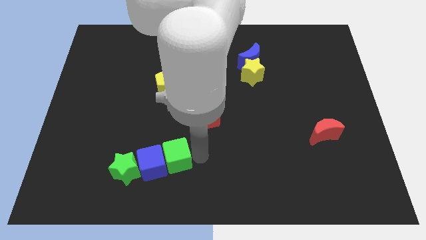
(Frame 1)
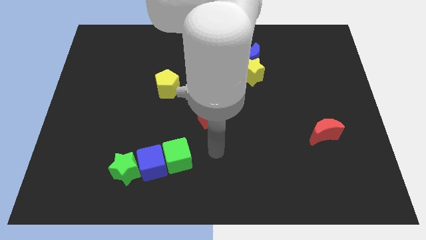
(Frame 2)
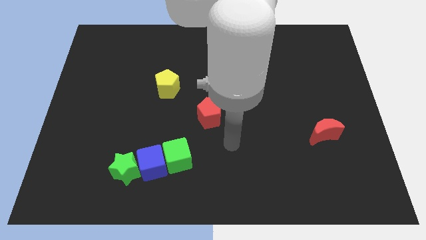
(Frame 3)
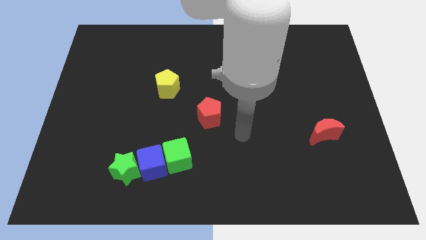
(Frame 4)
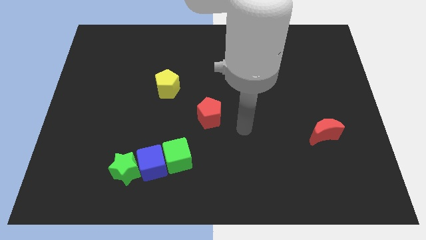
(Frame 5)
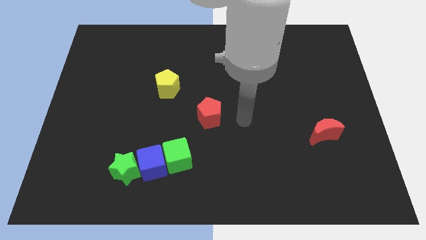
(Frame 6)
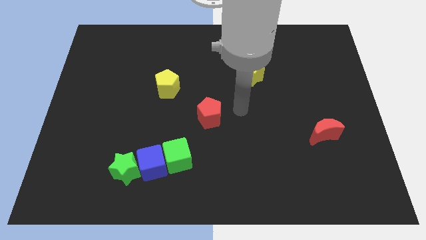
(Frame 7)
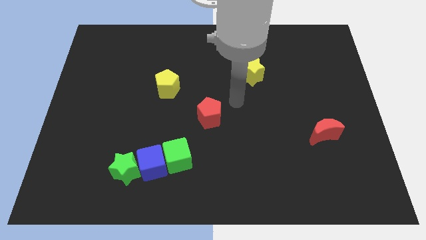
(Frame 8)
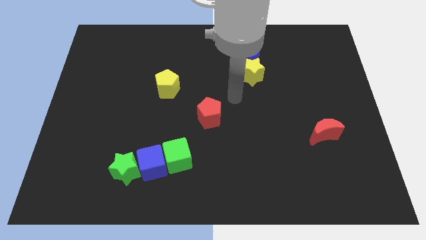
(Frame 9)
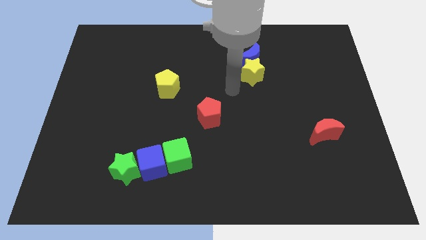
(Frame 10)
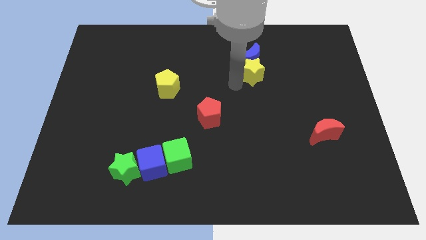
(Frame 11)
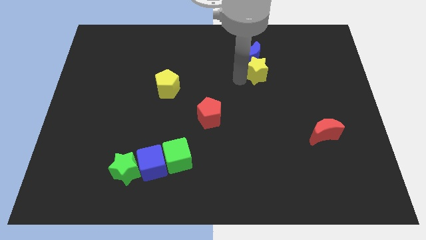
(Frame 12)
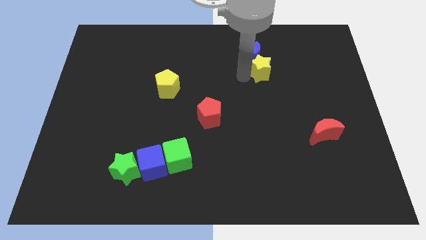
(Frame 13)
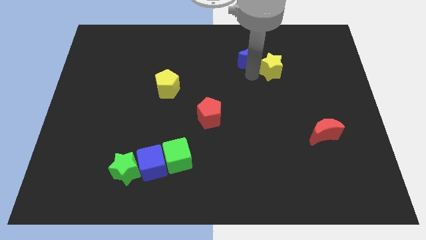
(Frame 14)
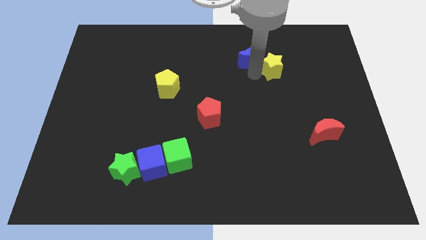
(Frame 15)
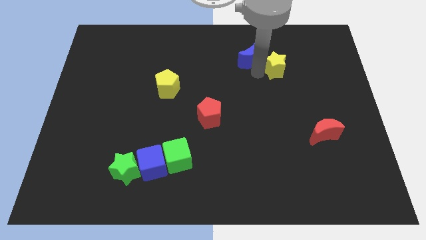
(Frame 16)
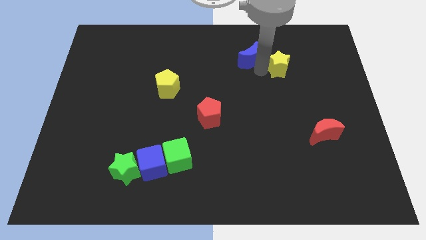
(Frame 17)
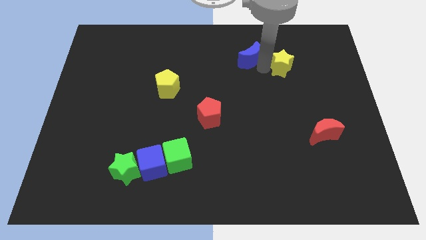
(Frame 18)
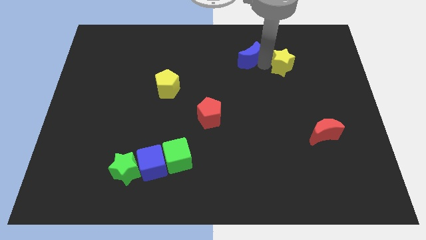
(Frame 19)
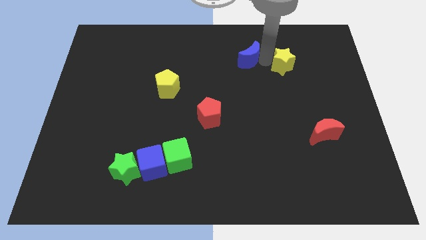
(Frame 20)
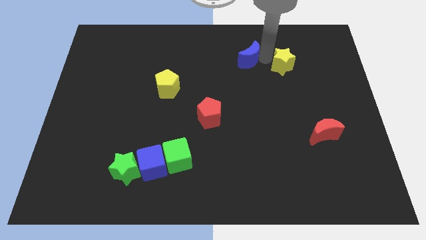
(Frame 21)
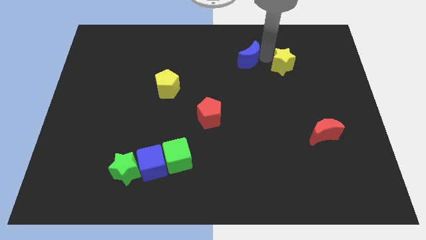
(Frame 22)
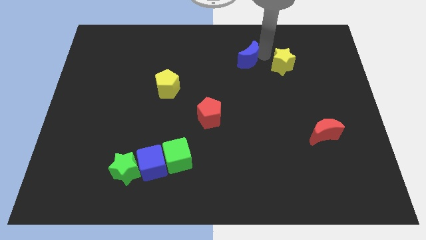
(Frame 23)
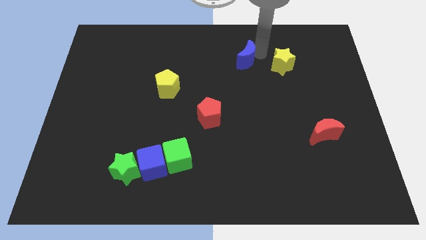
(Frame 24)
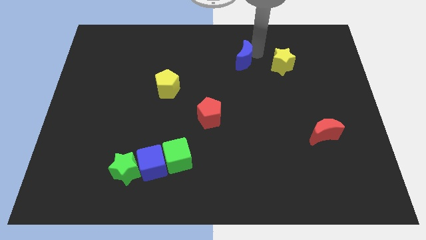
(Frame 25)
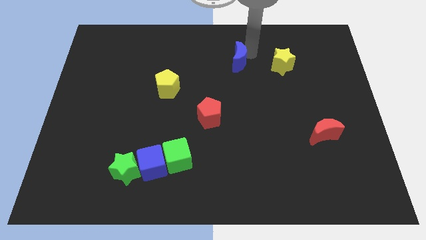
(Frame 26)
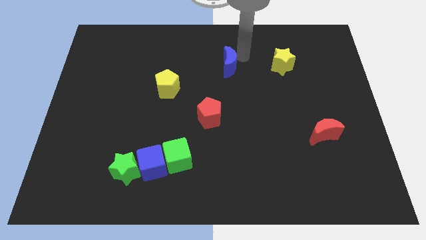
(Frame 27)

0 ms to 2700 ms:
make the blue moon and yellow star parallel to each other

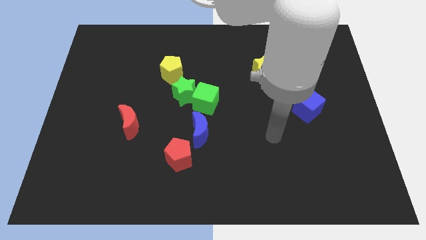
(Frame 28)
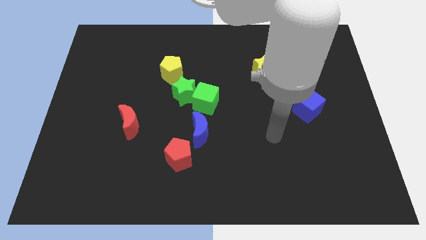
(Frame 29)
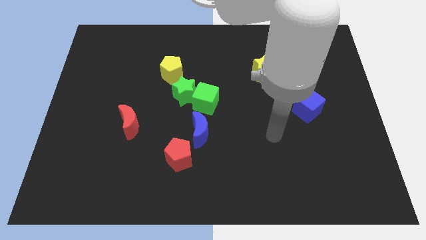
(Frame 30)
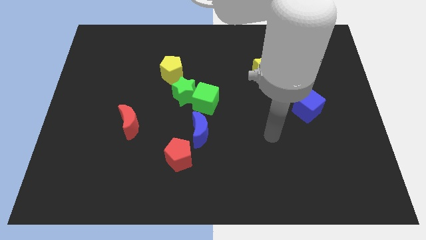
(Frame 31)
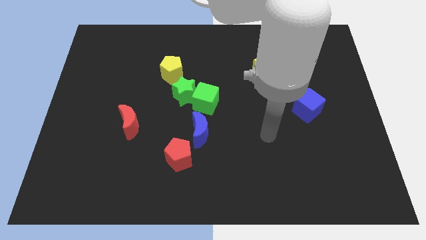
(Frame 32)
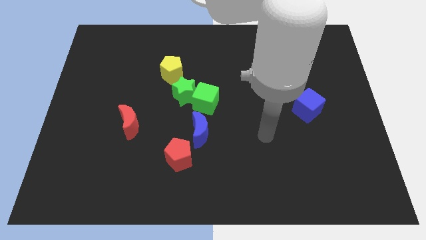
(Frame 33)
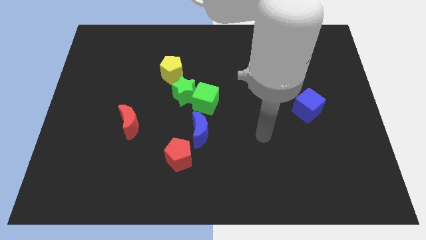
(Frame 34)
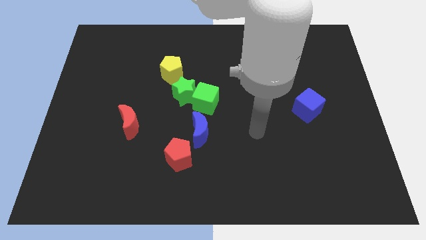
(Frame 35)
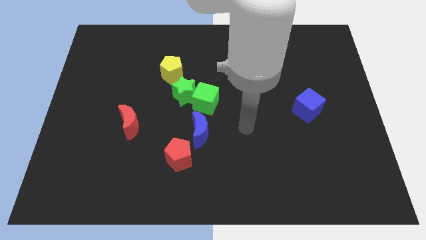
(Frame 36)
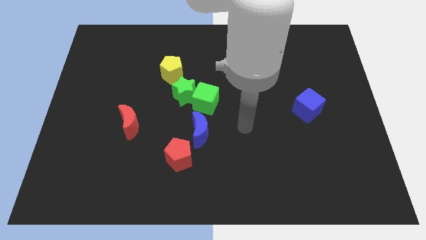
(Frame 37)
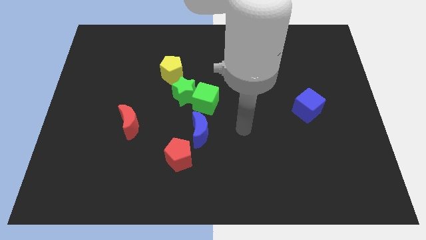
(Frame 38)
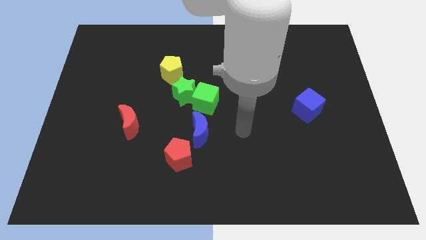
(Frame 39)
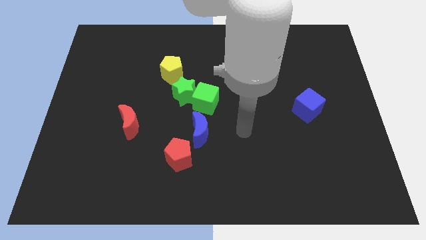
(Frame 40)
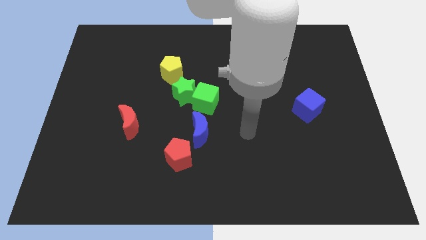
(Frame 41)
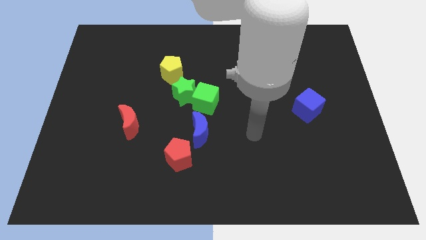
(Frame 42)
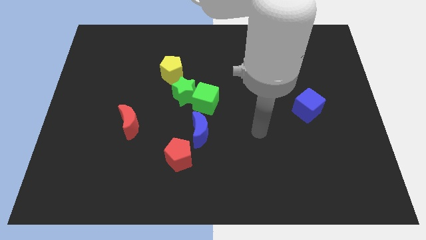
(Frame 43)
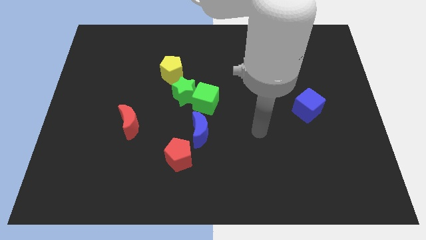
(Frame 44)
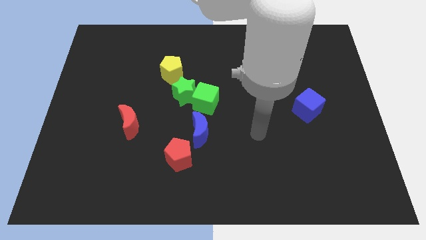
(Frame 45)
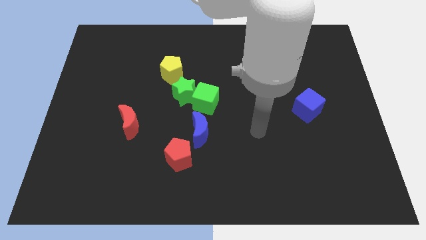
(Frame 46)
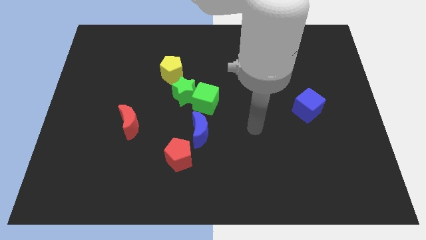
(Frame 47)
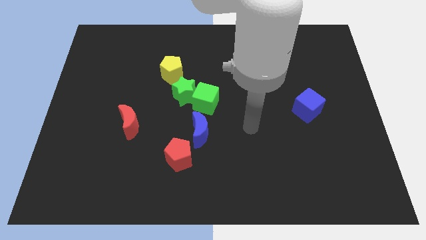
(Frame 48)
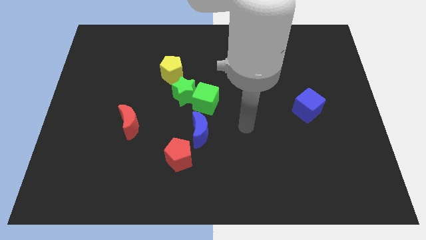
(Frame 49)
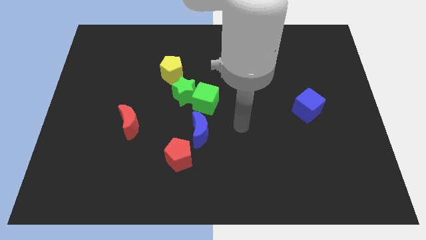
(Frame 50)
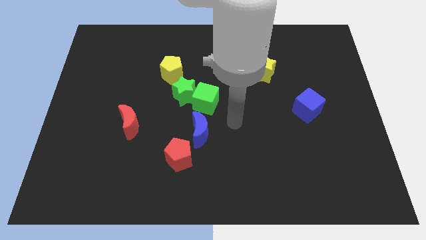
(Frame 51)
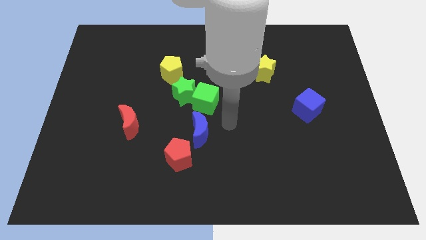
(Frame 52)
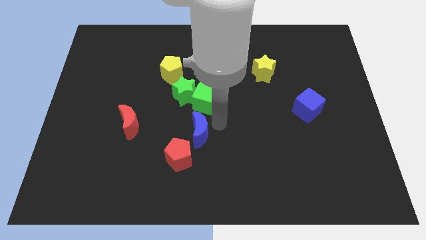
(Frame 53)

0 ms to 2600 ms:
move your arm to the right of the blue cresvent

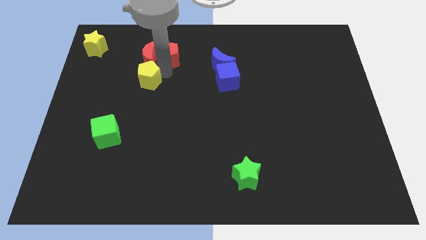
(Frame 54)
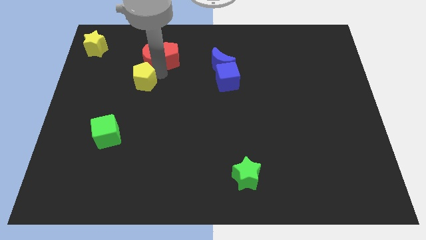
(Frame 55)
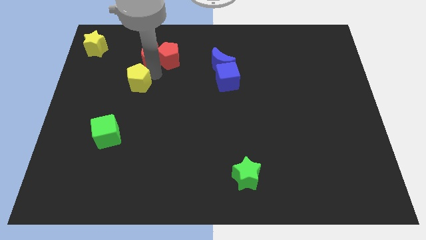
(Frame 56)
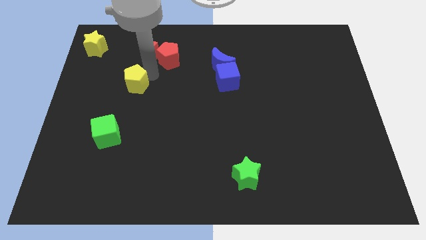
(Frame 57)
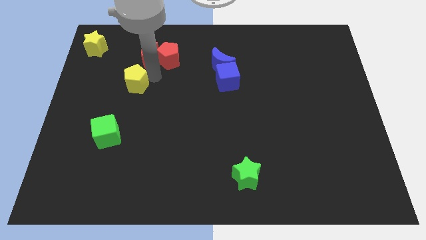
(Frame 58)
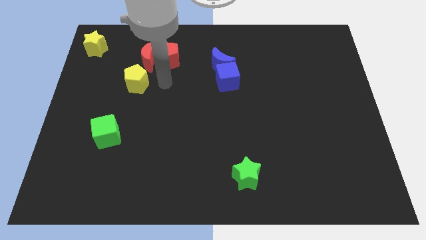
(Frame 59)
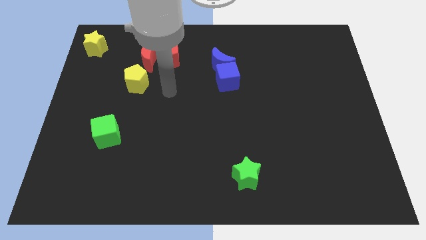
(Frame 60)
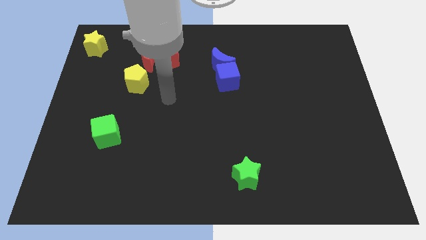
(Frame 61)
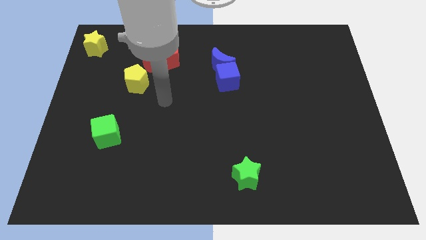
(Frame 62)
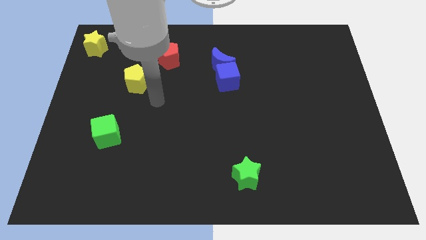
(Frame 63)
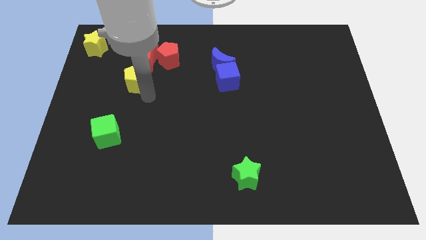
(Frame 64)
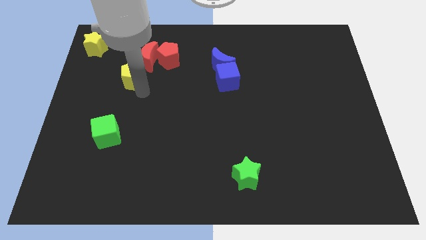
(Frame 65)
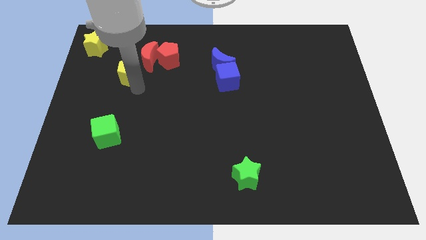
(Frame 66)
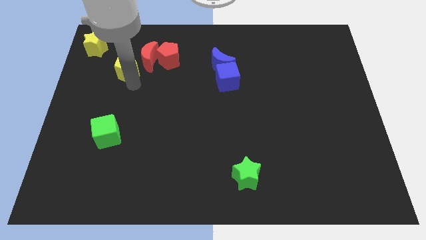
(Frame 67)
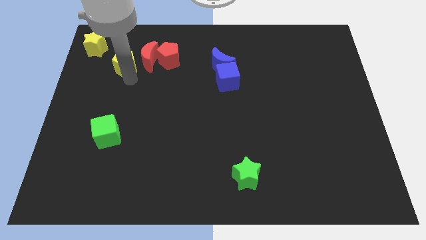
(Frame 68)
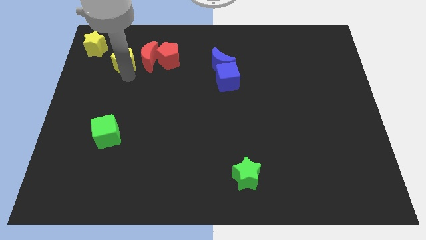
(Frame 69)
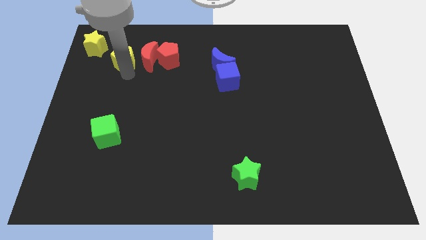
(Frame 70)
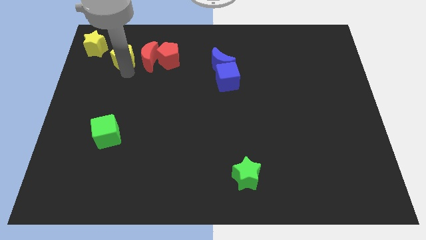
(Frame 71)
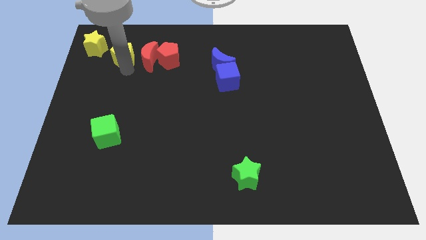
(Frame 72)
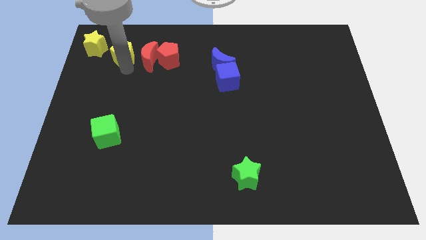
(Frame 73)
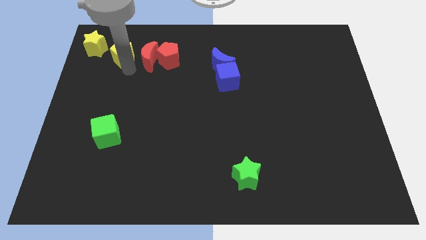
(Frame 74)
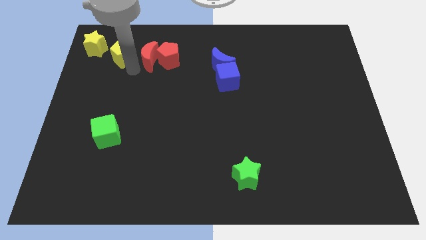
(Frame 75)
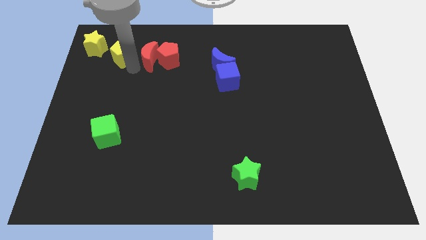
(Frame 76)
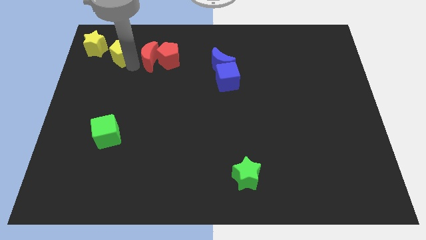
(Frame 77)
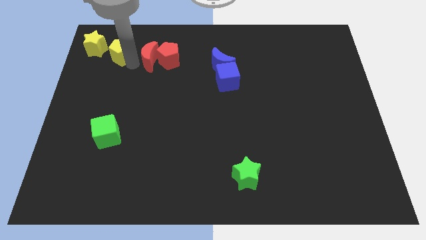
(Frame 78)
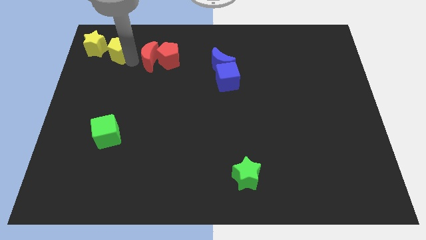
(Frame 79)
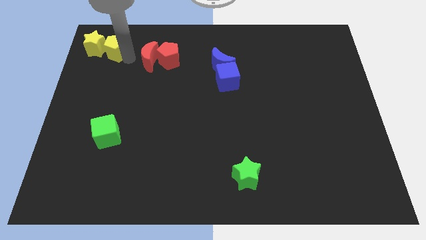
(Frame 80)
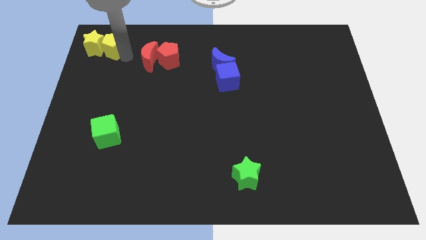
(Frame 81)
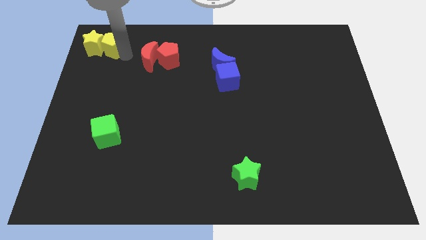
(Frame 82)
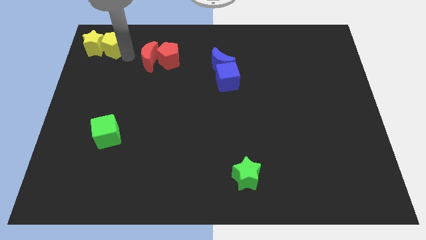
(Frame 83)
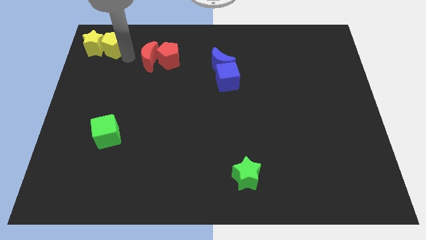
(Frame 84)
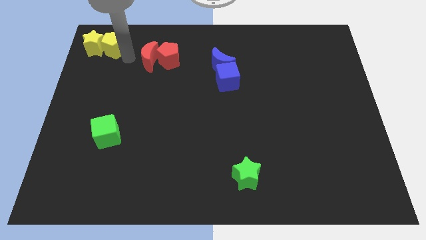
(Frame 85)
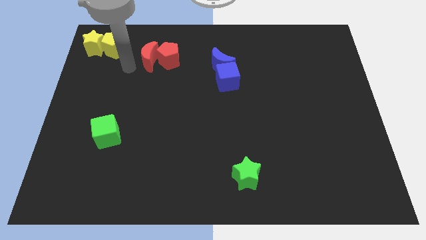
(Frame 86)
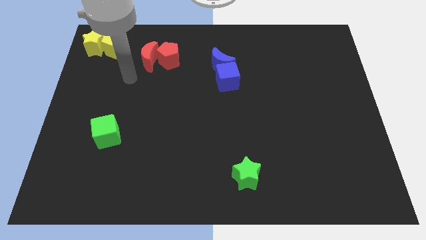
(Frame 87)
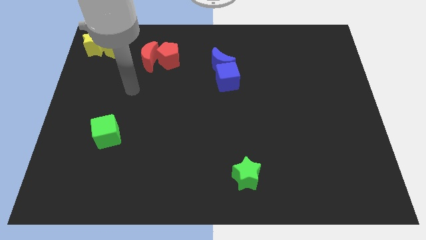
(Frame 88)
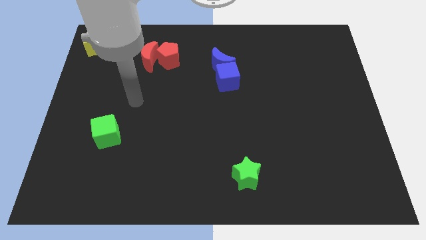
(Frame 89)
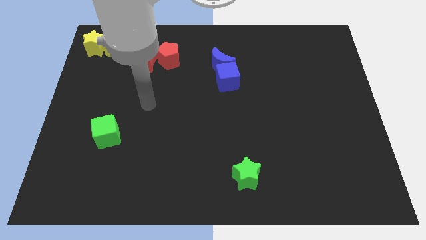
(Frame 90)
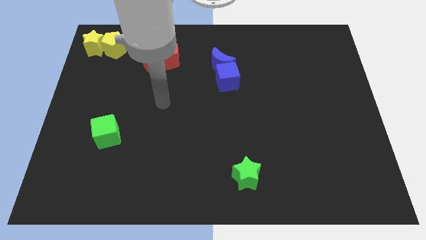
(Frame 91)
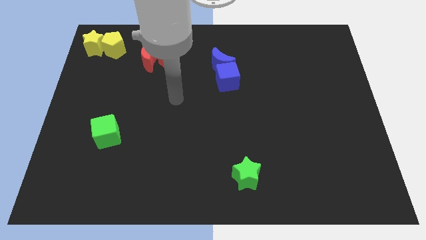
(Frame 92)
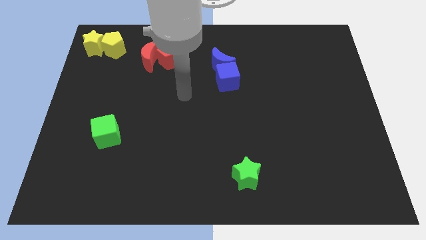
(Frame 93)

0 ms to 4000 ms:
place yellow pentagon right to yellow star
